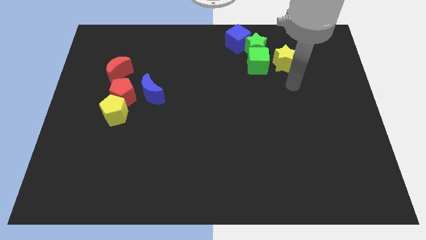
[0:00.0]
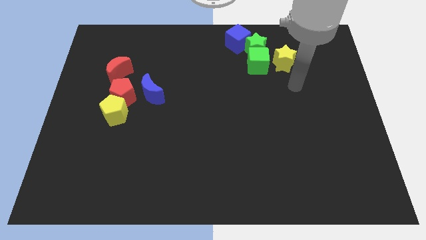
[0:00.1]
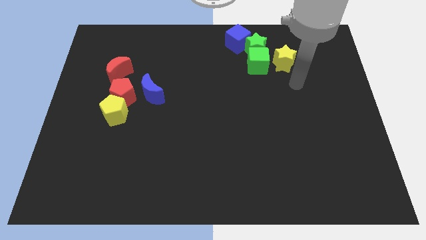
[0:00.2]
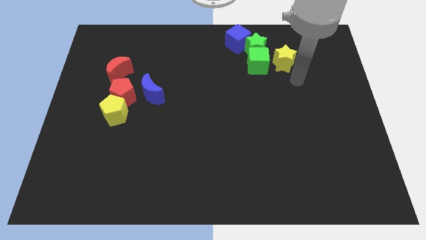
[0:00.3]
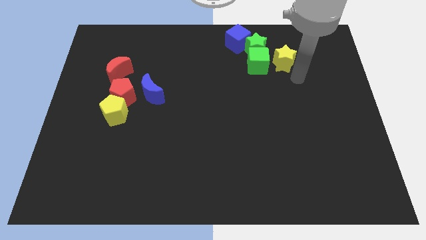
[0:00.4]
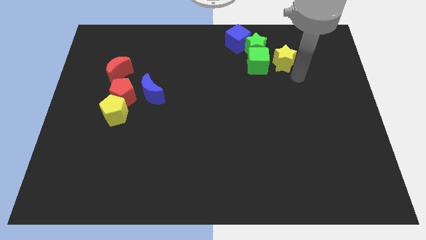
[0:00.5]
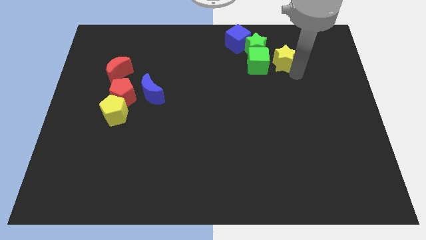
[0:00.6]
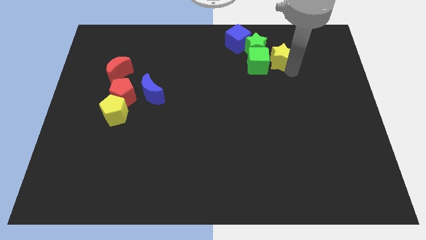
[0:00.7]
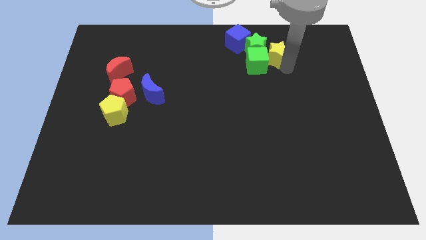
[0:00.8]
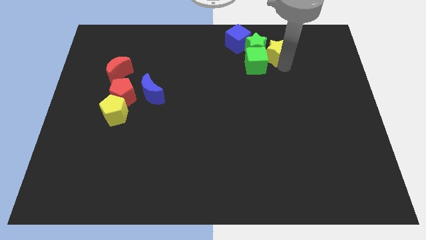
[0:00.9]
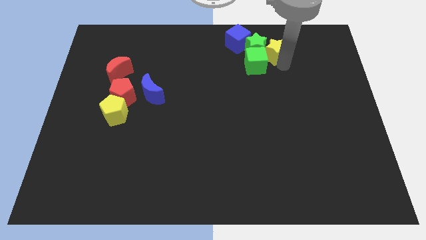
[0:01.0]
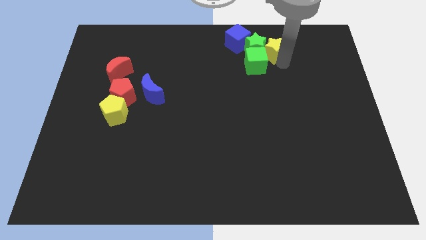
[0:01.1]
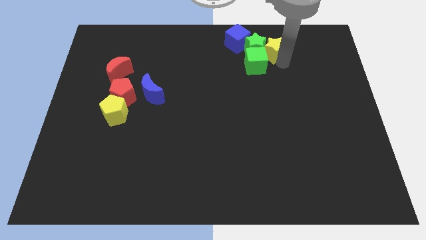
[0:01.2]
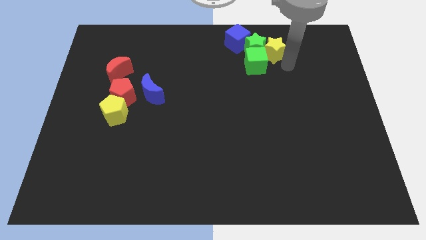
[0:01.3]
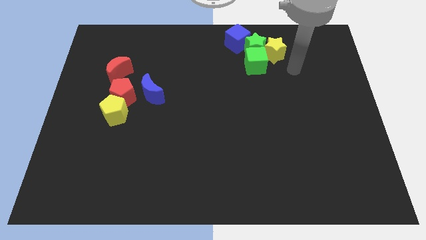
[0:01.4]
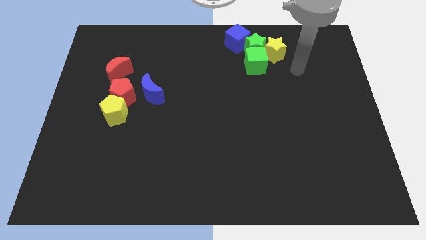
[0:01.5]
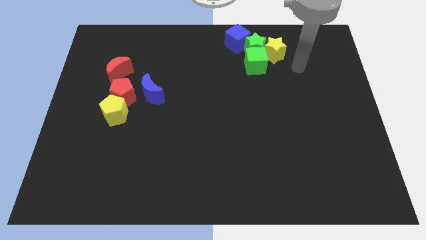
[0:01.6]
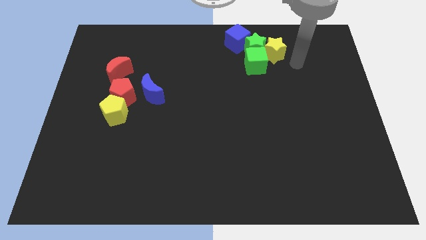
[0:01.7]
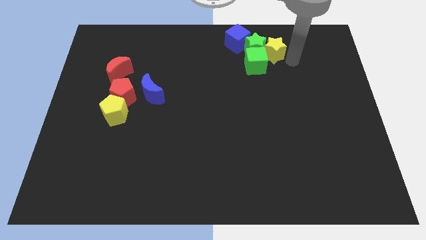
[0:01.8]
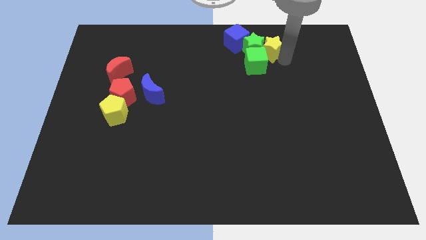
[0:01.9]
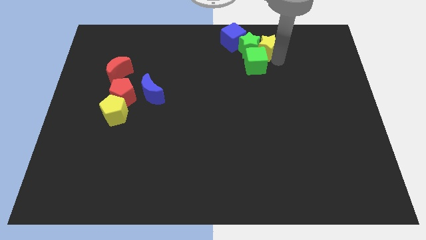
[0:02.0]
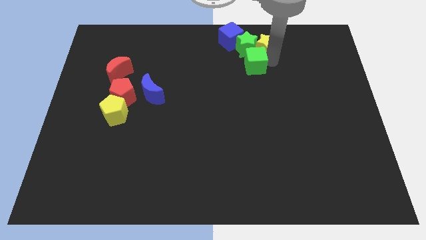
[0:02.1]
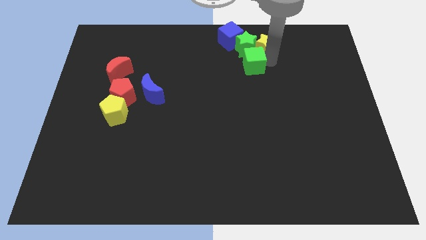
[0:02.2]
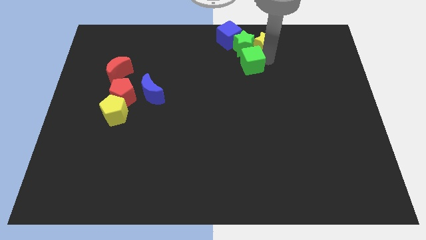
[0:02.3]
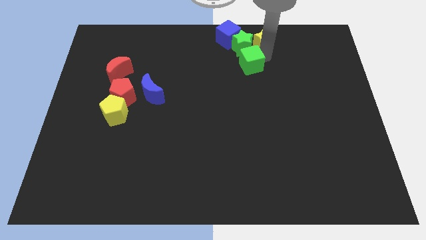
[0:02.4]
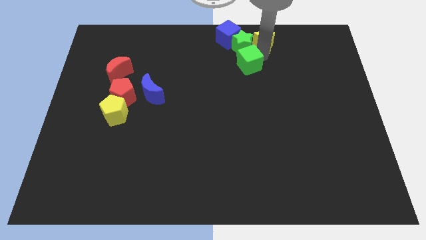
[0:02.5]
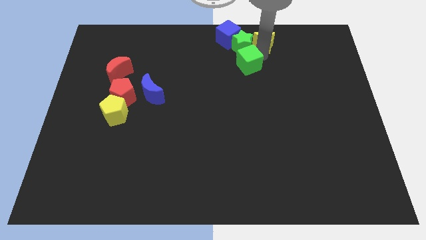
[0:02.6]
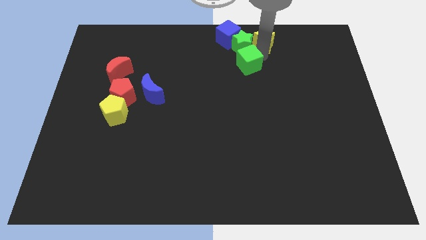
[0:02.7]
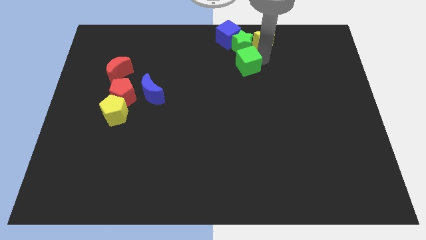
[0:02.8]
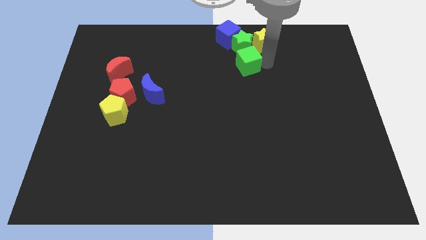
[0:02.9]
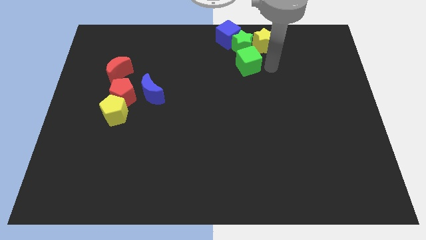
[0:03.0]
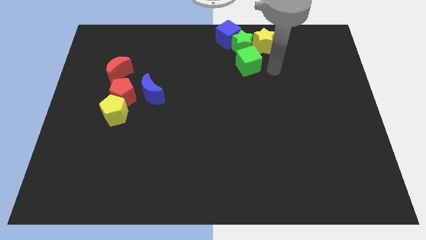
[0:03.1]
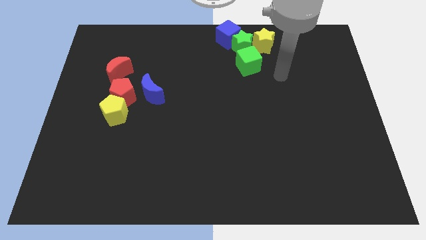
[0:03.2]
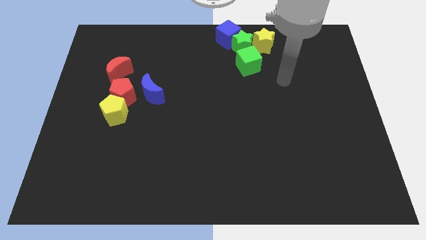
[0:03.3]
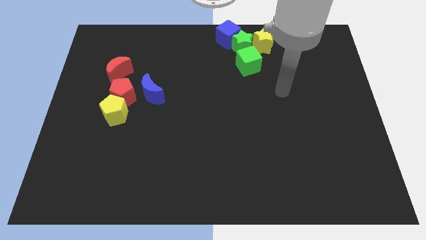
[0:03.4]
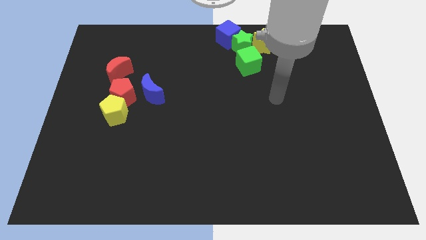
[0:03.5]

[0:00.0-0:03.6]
move yellow star into group of blocks

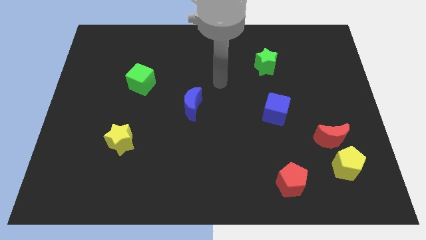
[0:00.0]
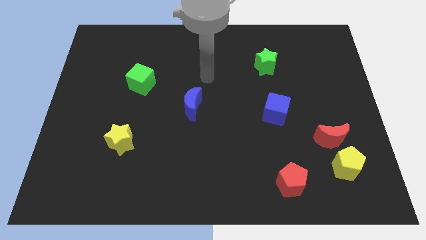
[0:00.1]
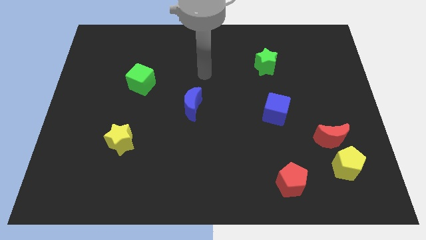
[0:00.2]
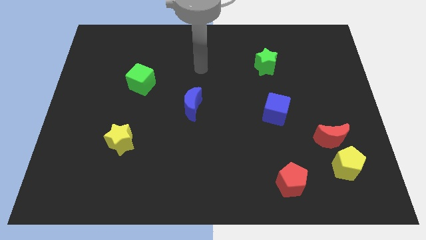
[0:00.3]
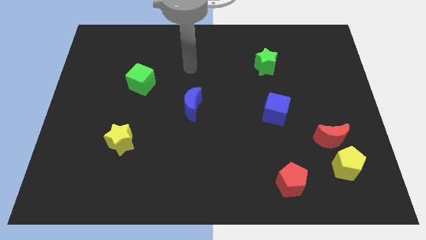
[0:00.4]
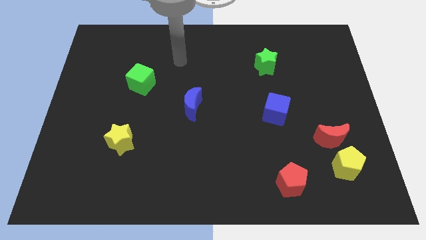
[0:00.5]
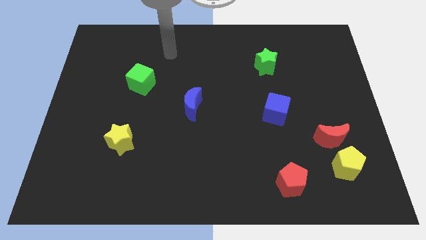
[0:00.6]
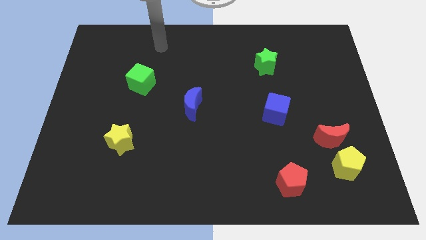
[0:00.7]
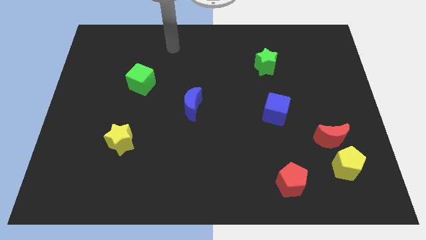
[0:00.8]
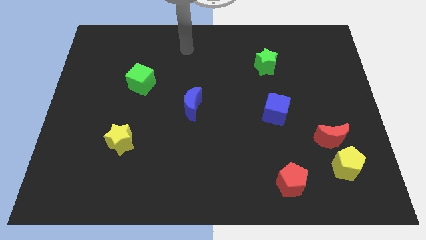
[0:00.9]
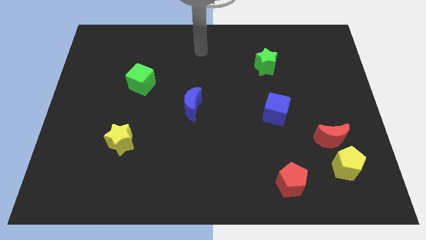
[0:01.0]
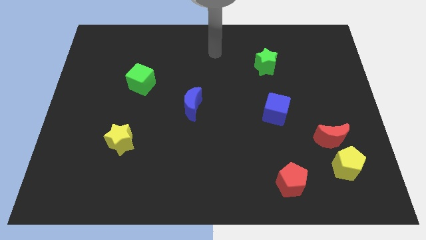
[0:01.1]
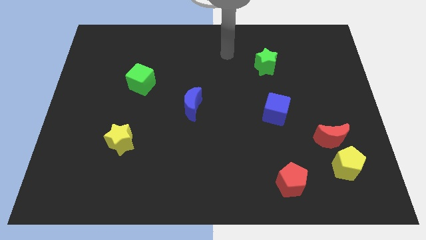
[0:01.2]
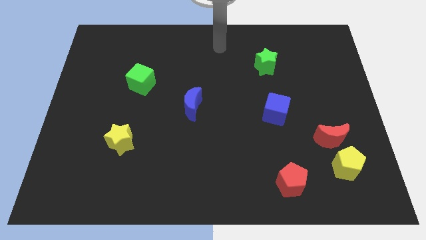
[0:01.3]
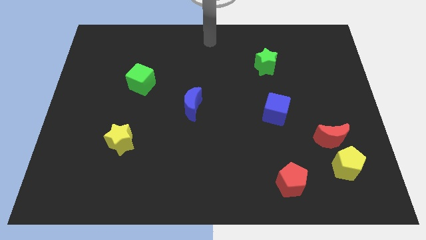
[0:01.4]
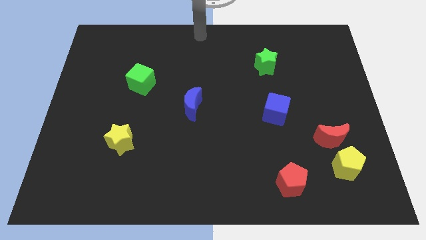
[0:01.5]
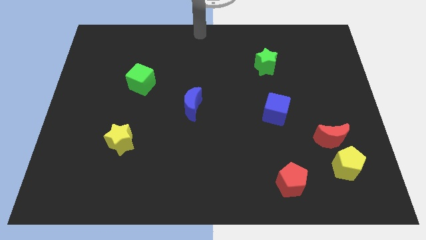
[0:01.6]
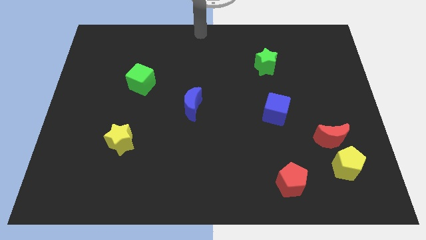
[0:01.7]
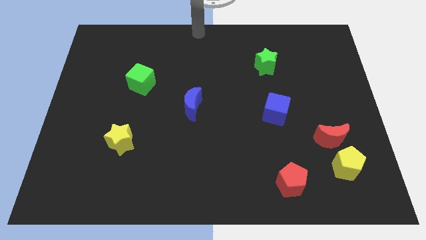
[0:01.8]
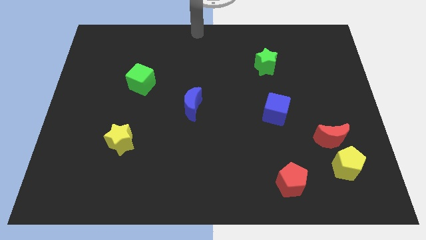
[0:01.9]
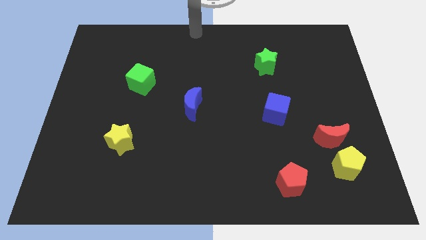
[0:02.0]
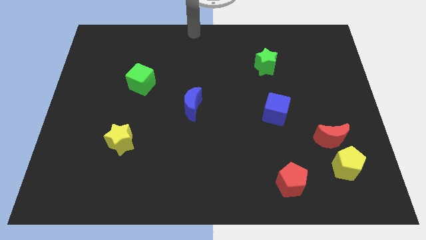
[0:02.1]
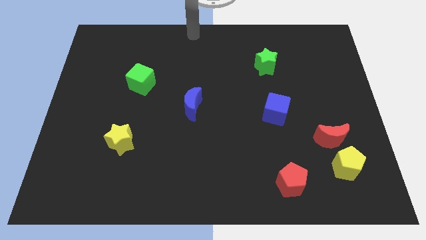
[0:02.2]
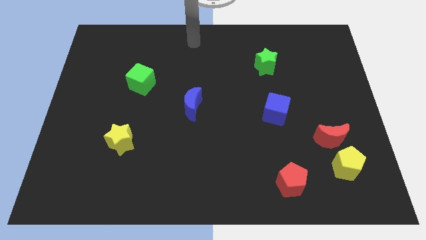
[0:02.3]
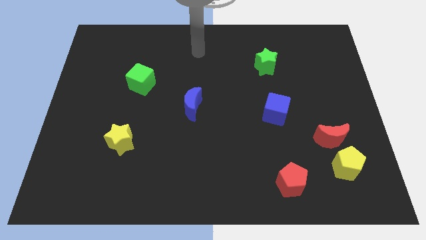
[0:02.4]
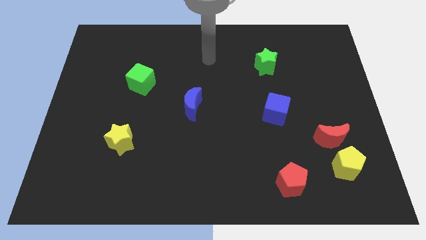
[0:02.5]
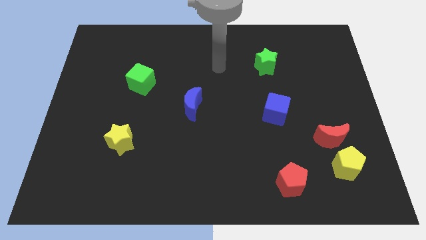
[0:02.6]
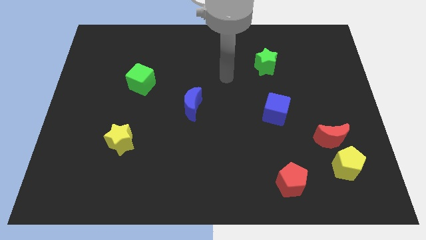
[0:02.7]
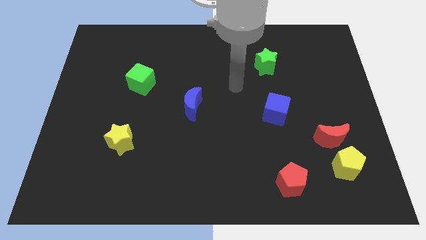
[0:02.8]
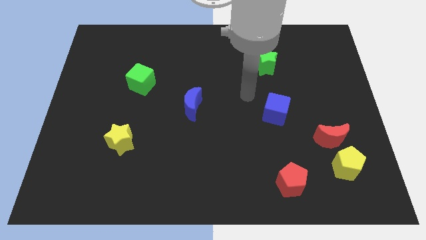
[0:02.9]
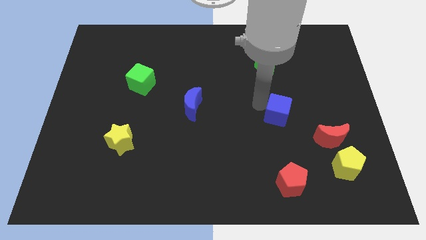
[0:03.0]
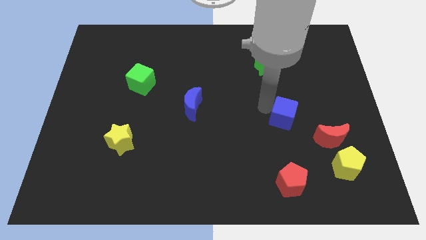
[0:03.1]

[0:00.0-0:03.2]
go and touch the left side of the blue cube

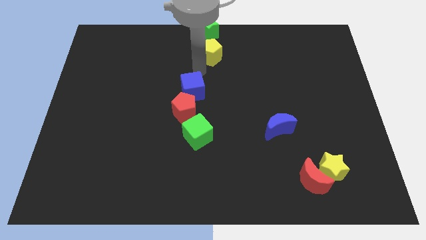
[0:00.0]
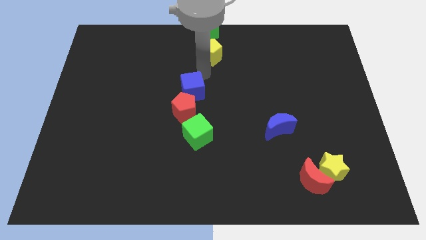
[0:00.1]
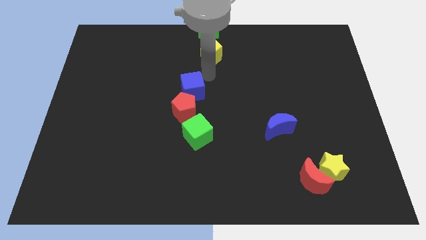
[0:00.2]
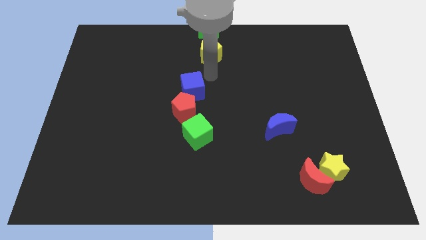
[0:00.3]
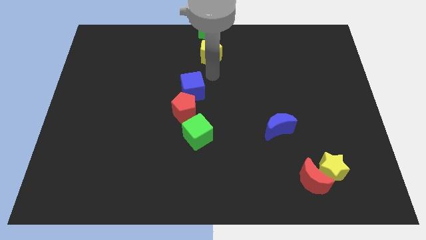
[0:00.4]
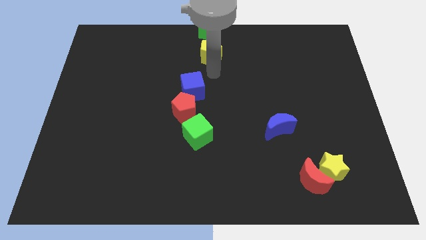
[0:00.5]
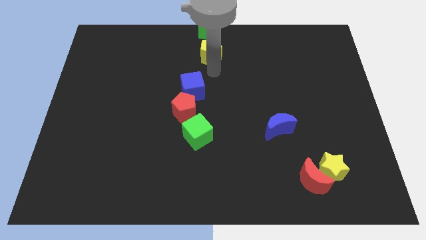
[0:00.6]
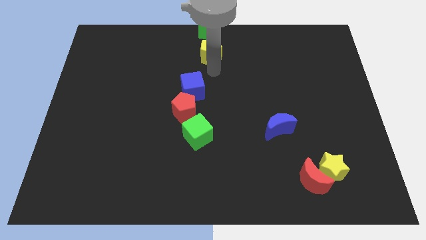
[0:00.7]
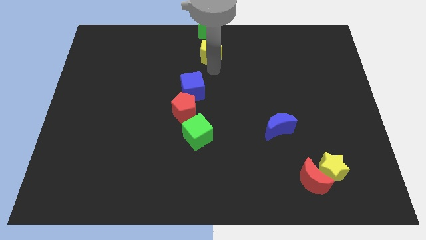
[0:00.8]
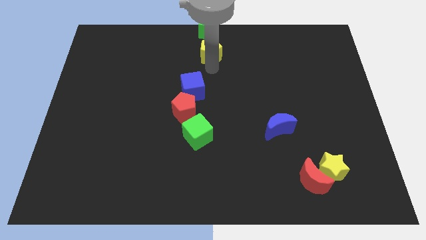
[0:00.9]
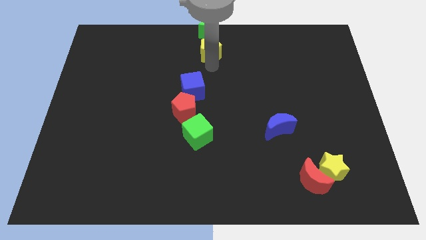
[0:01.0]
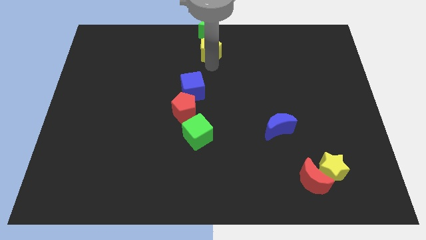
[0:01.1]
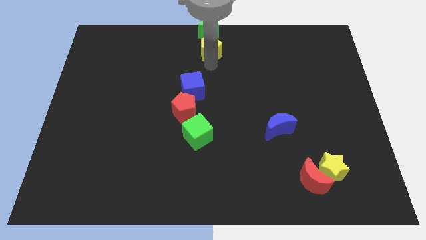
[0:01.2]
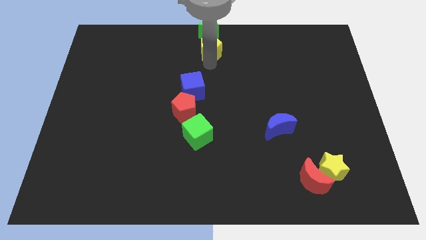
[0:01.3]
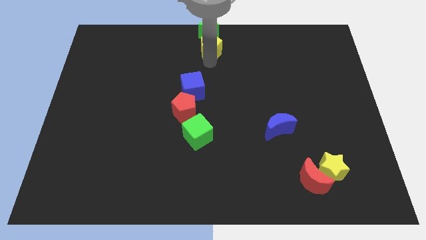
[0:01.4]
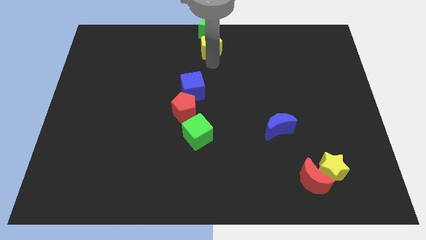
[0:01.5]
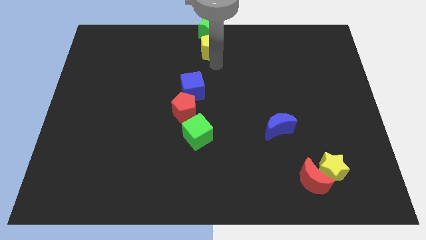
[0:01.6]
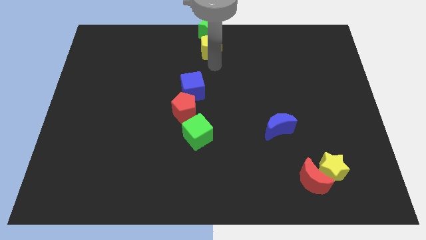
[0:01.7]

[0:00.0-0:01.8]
slightly push the yellow pentagon towards green star

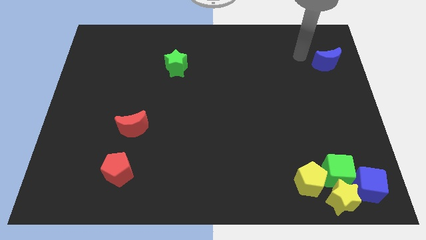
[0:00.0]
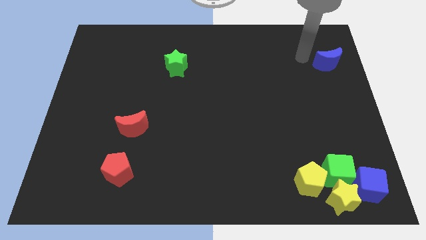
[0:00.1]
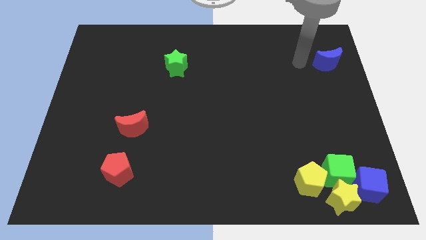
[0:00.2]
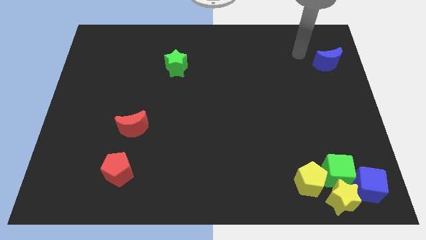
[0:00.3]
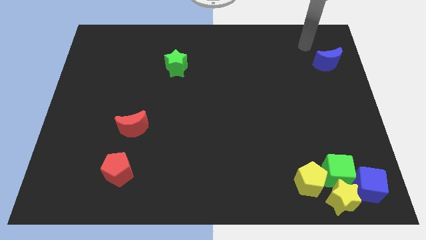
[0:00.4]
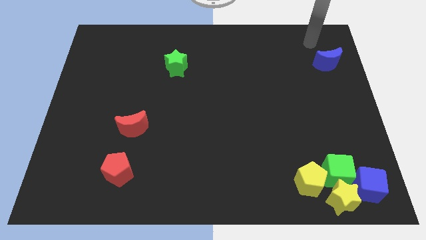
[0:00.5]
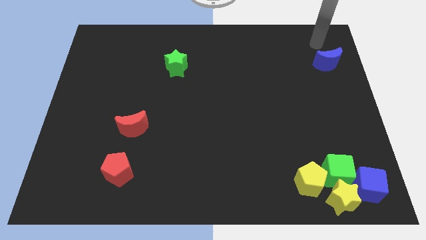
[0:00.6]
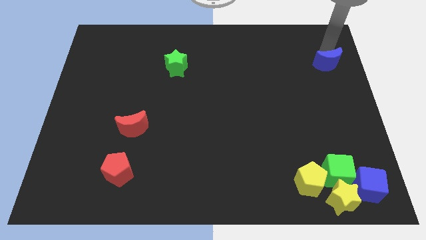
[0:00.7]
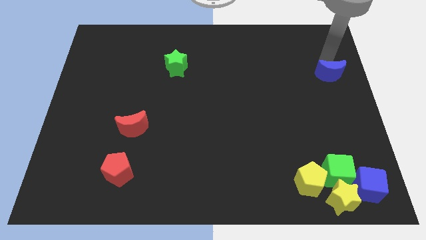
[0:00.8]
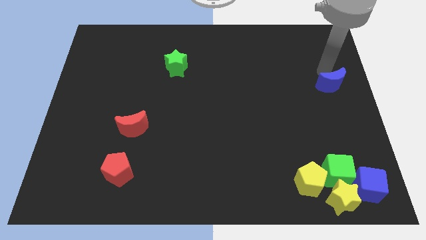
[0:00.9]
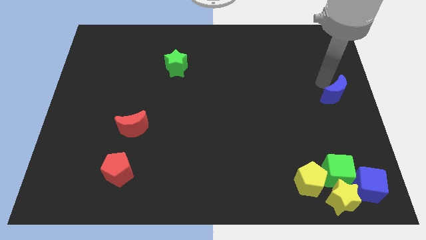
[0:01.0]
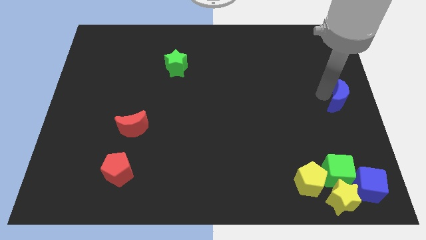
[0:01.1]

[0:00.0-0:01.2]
move blue moon to the right center
